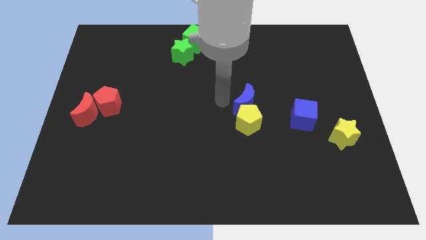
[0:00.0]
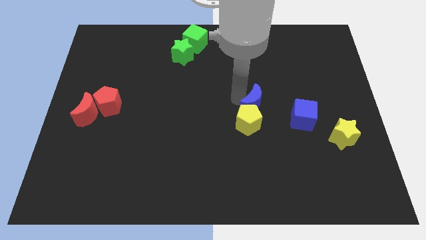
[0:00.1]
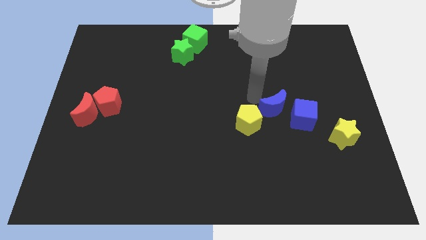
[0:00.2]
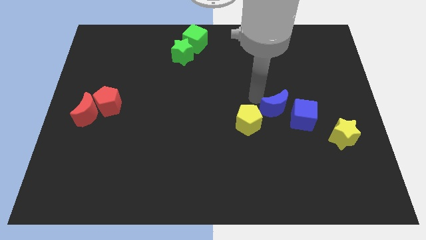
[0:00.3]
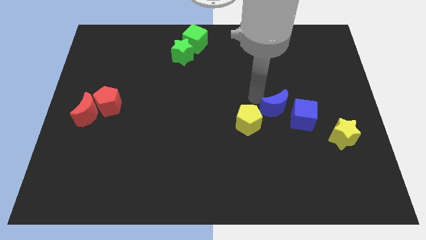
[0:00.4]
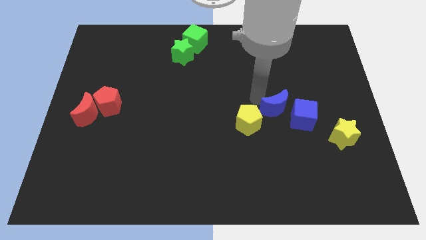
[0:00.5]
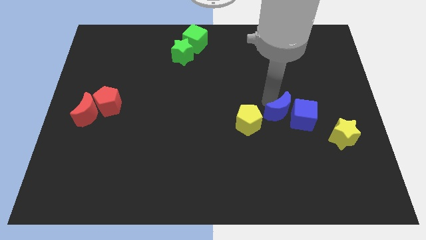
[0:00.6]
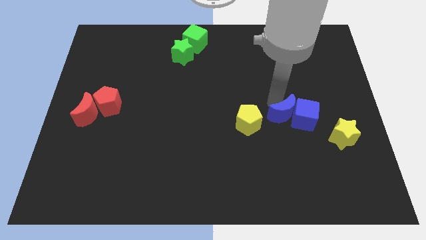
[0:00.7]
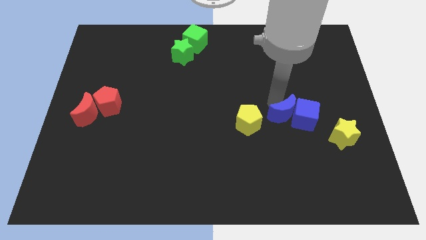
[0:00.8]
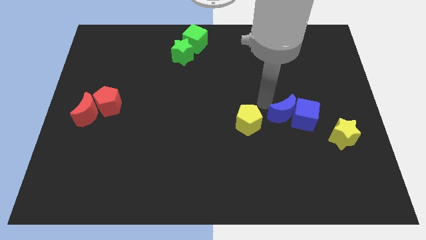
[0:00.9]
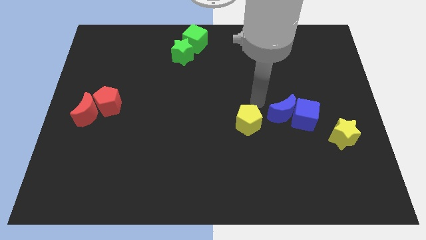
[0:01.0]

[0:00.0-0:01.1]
push the blue crescent into the blue cube

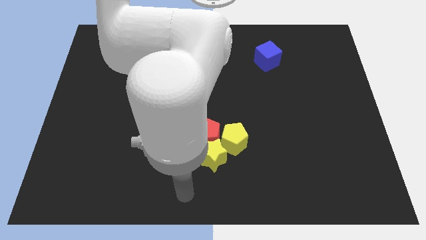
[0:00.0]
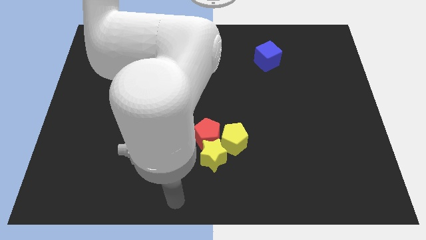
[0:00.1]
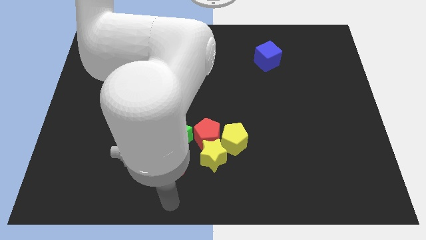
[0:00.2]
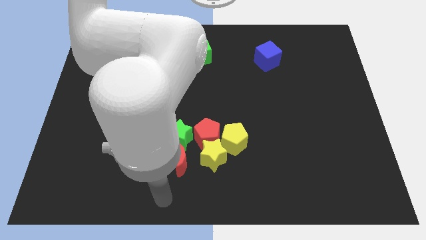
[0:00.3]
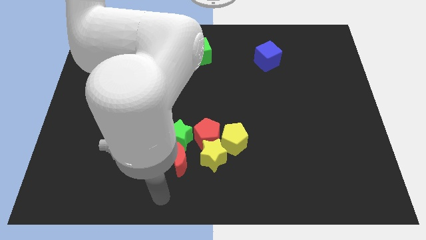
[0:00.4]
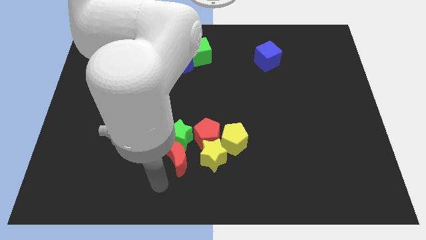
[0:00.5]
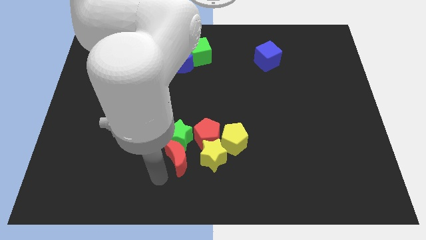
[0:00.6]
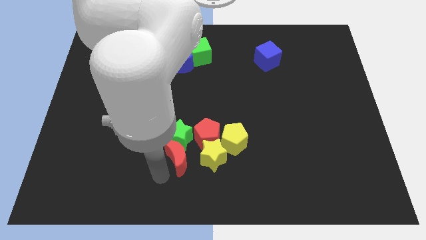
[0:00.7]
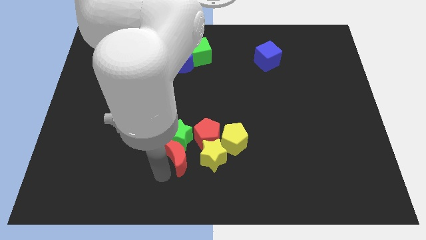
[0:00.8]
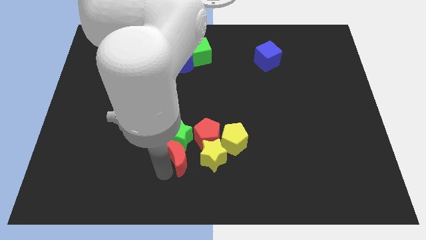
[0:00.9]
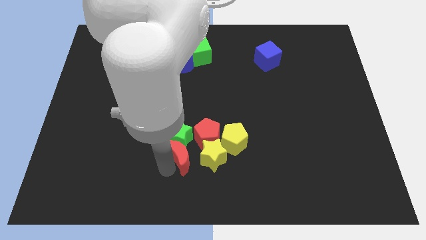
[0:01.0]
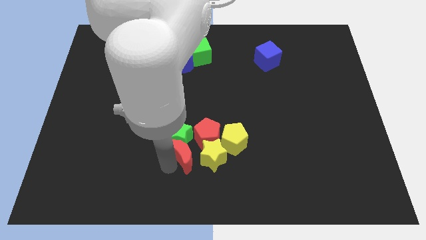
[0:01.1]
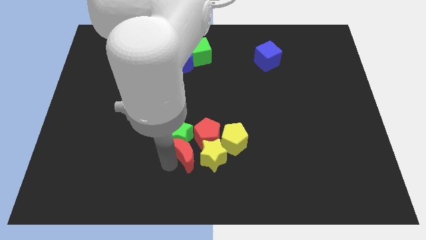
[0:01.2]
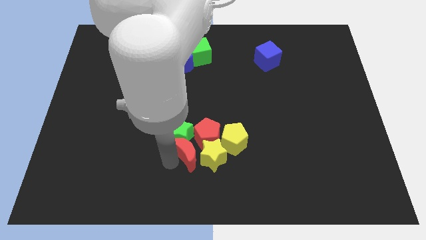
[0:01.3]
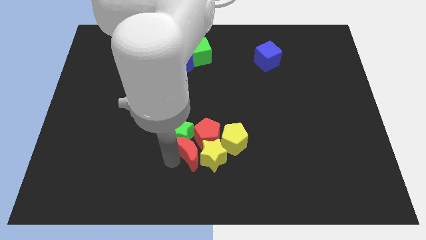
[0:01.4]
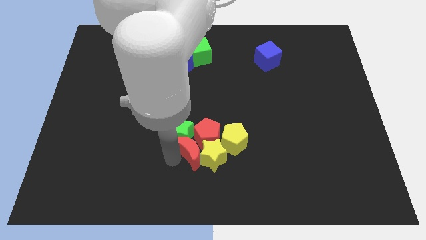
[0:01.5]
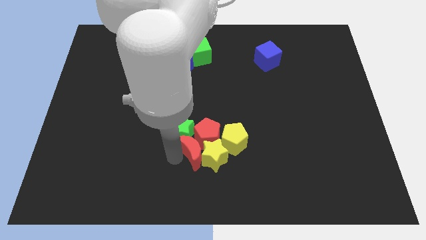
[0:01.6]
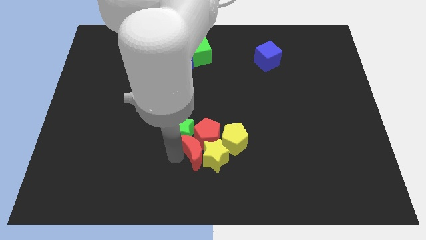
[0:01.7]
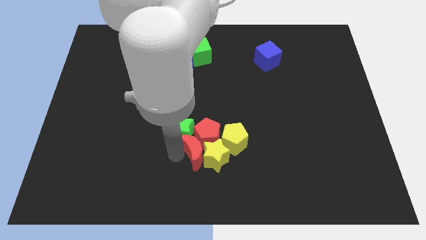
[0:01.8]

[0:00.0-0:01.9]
place red moon into the yellow star

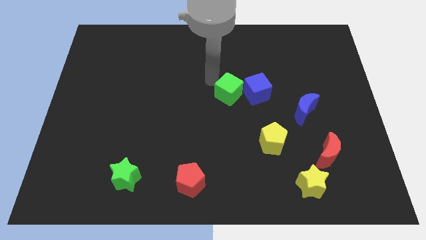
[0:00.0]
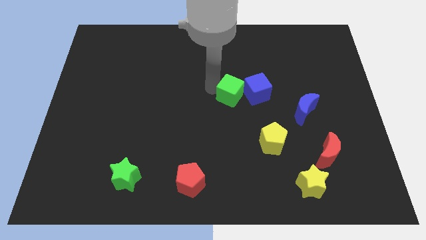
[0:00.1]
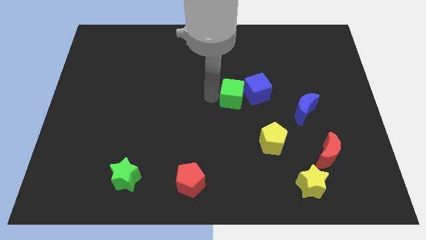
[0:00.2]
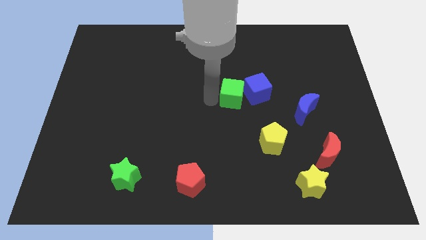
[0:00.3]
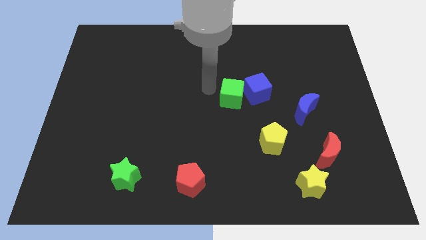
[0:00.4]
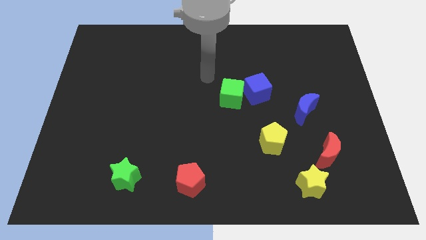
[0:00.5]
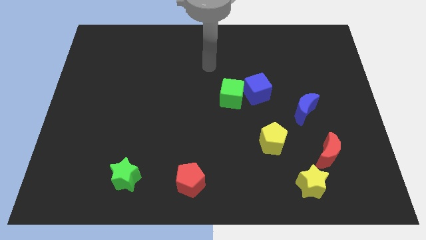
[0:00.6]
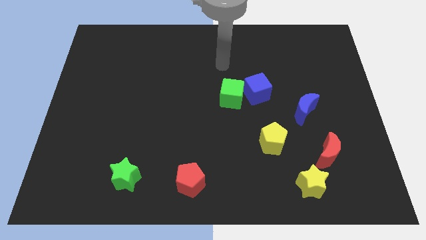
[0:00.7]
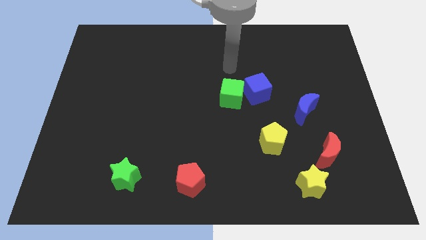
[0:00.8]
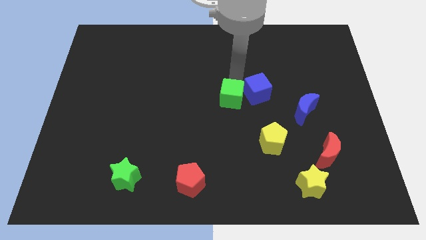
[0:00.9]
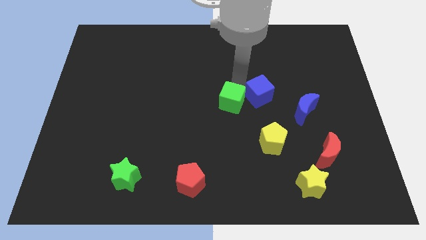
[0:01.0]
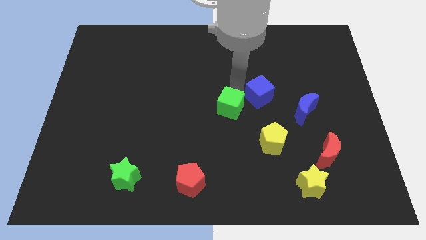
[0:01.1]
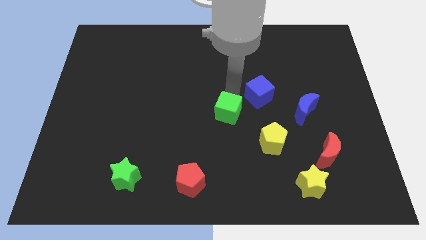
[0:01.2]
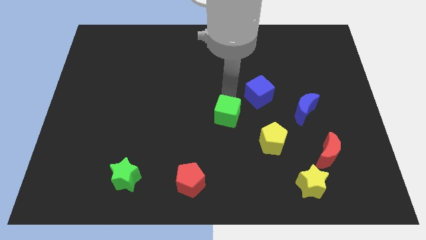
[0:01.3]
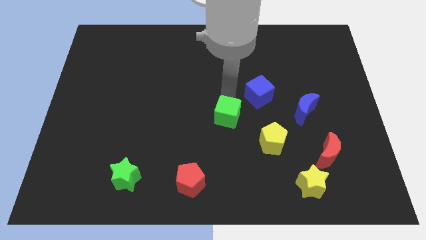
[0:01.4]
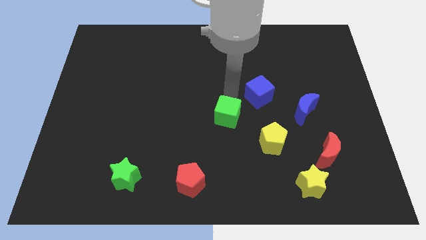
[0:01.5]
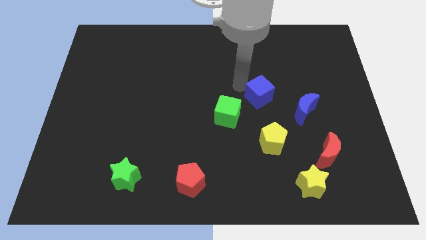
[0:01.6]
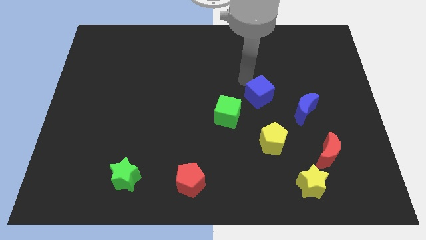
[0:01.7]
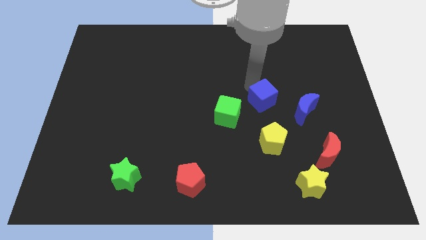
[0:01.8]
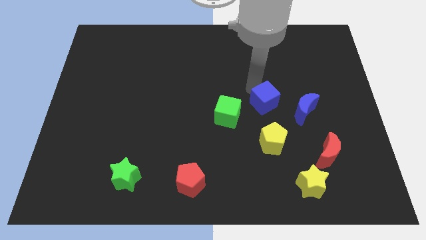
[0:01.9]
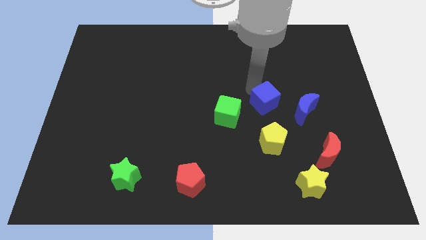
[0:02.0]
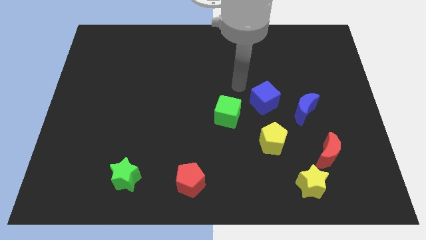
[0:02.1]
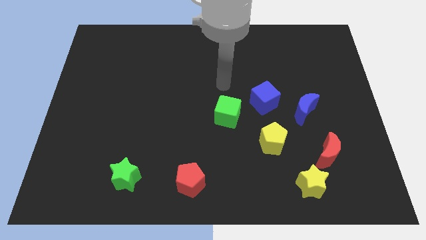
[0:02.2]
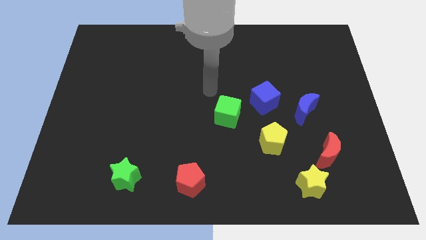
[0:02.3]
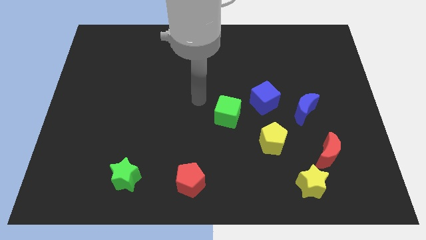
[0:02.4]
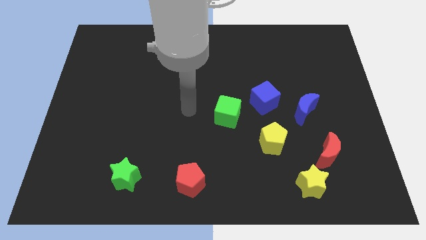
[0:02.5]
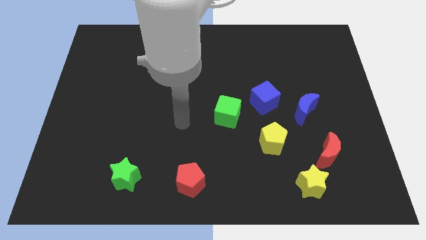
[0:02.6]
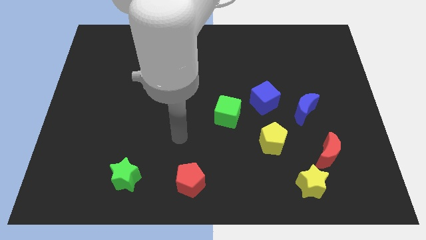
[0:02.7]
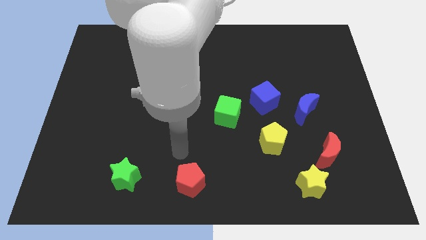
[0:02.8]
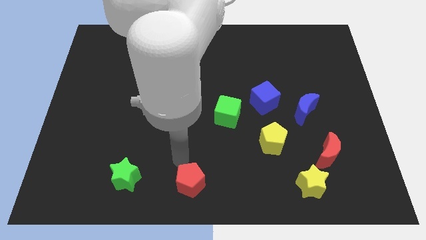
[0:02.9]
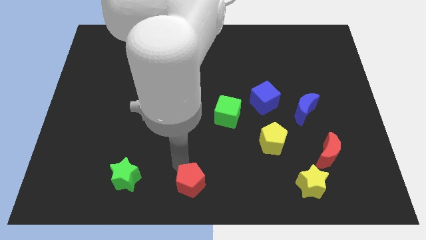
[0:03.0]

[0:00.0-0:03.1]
separate the green cube and blue cube

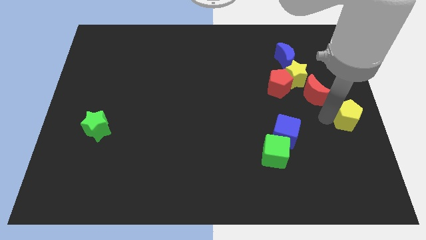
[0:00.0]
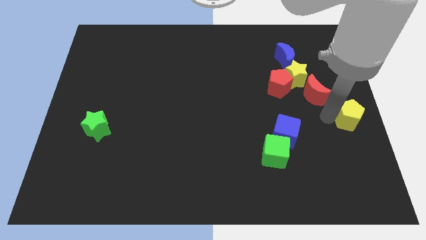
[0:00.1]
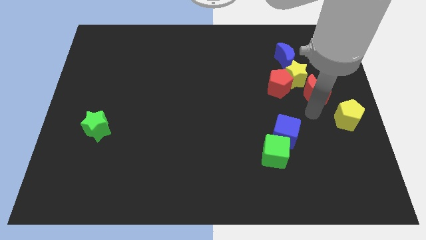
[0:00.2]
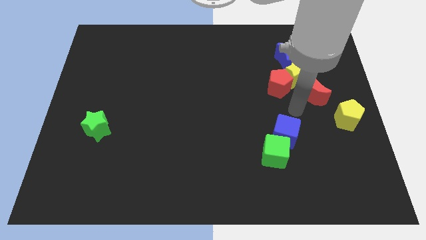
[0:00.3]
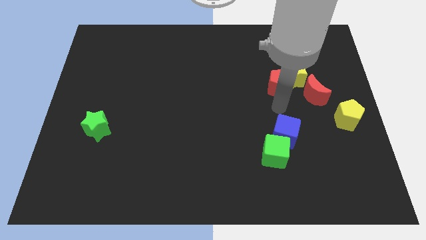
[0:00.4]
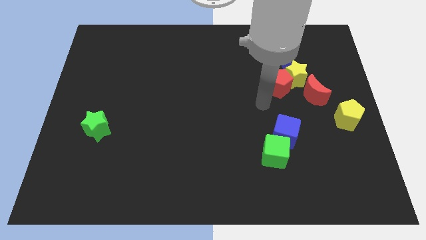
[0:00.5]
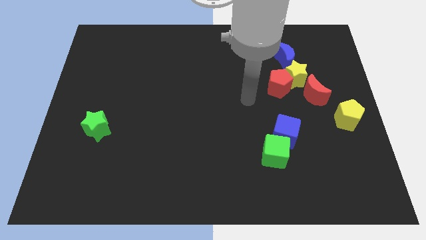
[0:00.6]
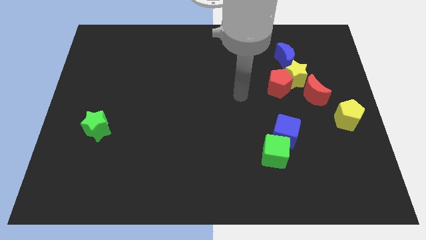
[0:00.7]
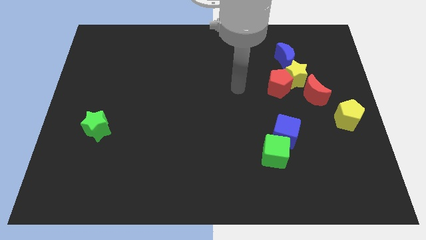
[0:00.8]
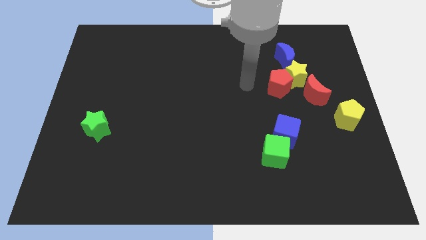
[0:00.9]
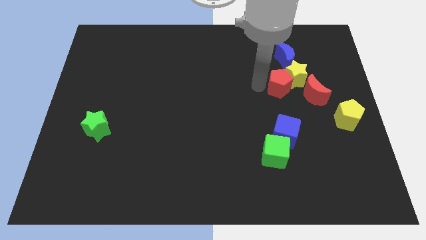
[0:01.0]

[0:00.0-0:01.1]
point your arm to the left side of red pentagon

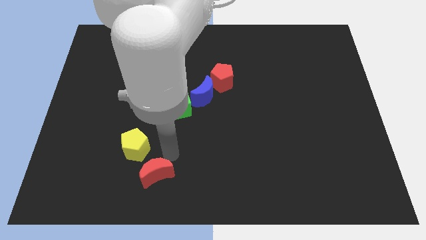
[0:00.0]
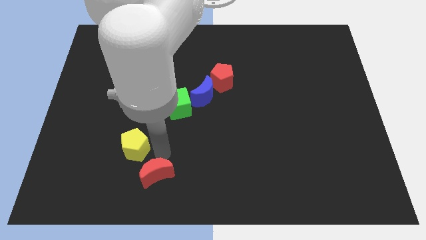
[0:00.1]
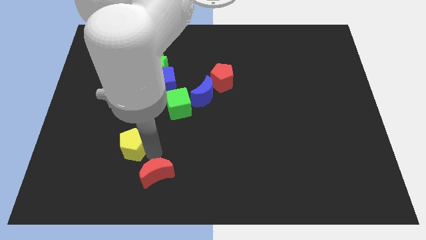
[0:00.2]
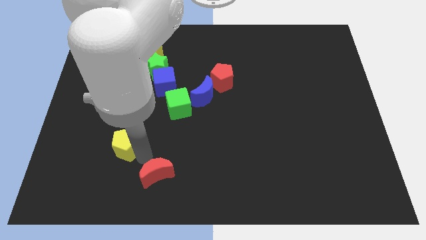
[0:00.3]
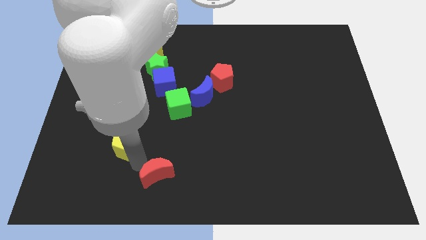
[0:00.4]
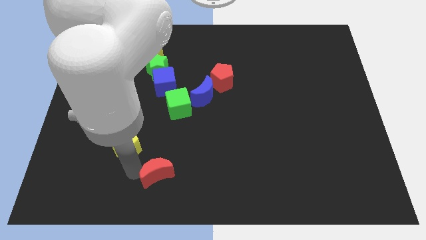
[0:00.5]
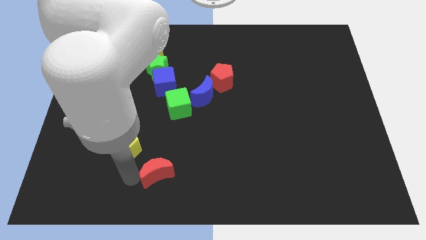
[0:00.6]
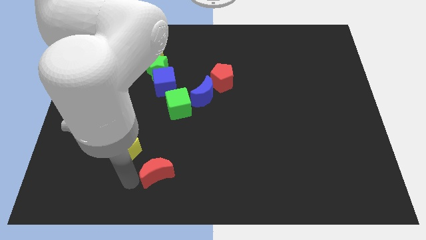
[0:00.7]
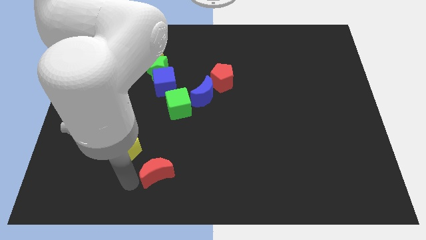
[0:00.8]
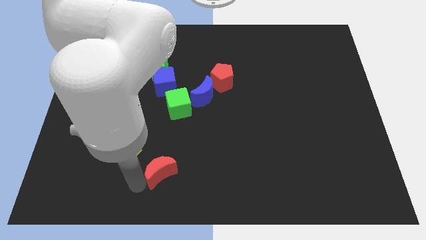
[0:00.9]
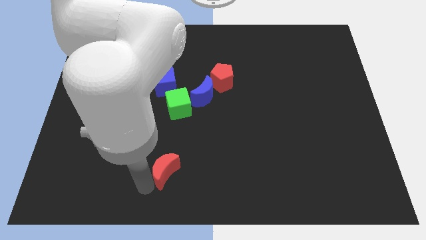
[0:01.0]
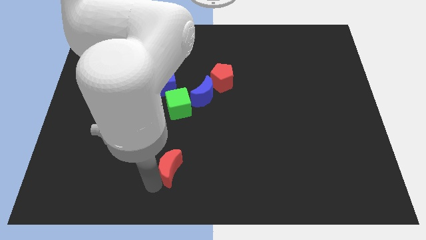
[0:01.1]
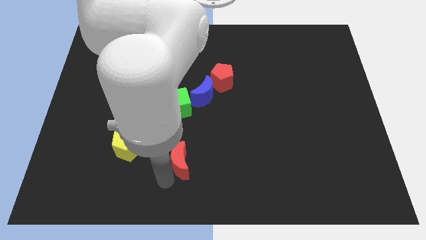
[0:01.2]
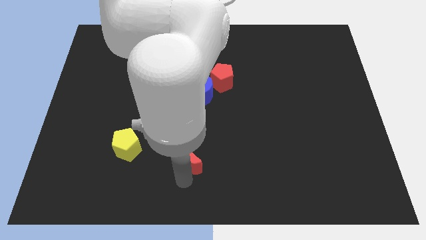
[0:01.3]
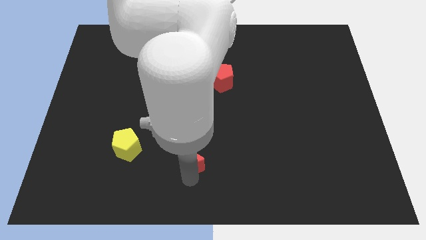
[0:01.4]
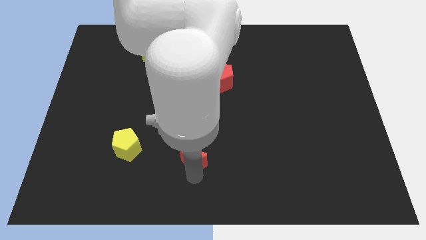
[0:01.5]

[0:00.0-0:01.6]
slide the red moon and the yellow pentagon away from each other
